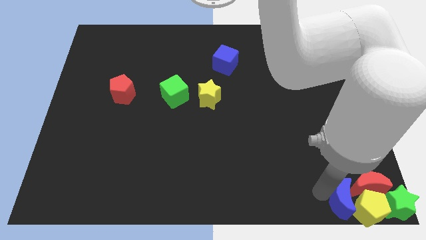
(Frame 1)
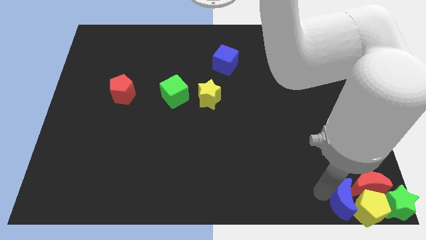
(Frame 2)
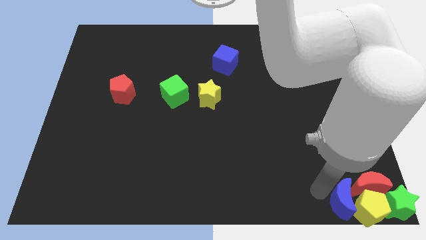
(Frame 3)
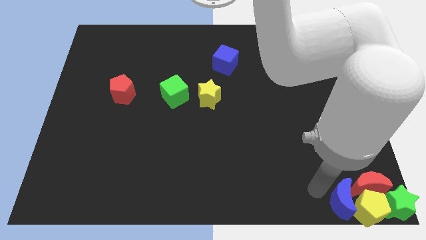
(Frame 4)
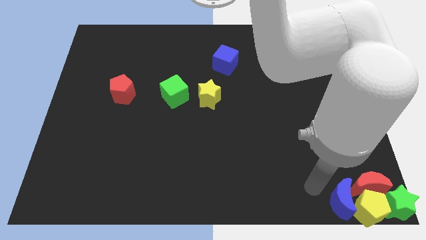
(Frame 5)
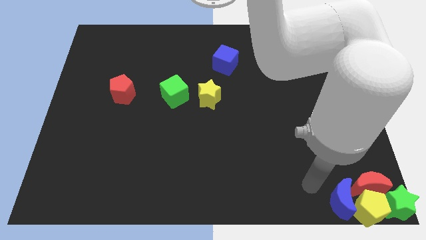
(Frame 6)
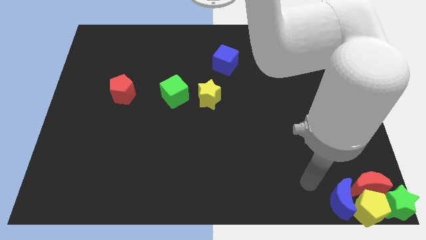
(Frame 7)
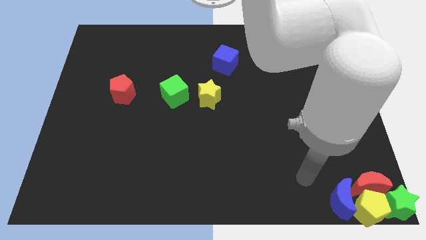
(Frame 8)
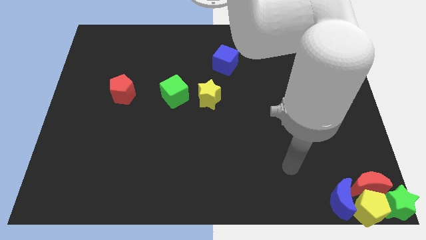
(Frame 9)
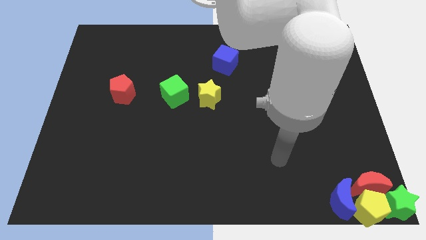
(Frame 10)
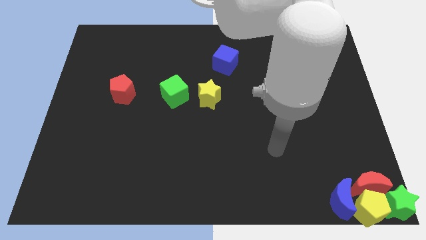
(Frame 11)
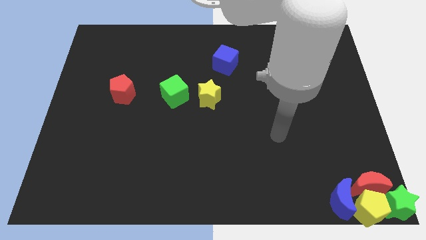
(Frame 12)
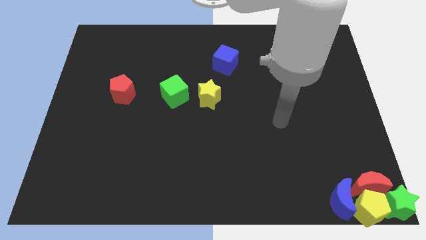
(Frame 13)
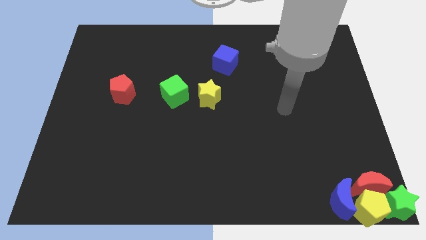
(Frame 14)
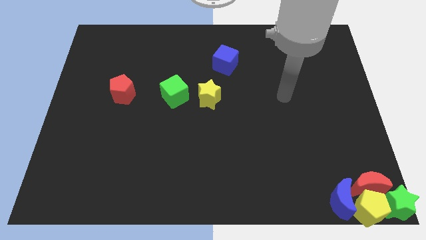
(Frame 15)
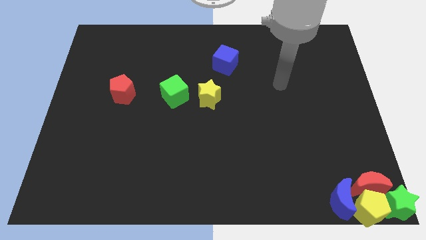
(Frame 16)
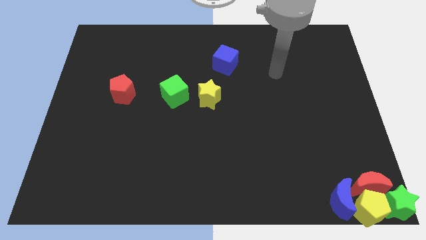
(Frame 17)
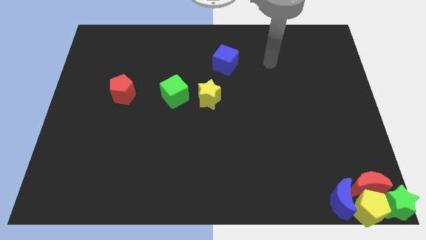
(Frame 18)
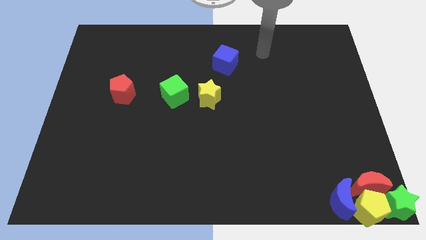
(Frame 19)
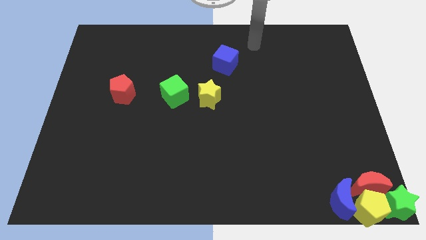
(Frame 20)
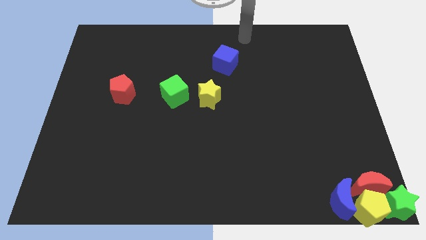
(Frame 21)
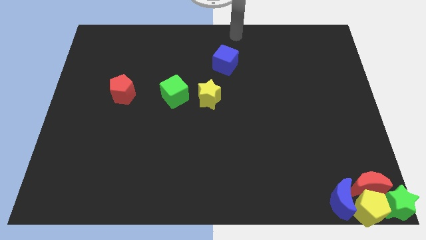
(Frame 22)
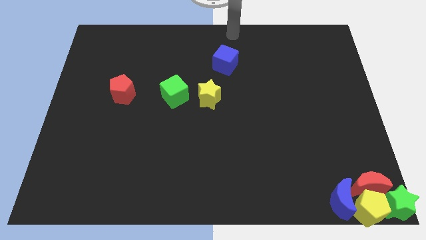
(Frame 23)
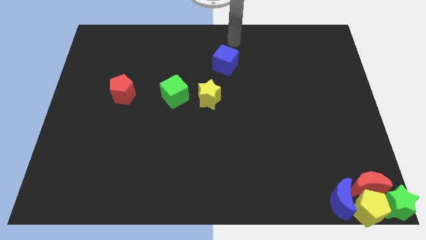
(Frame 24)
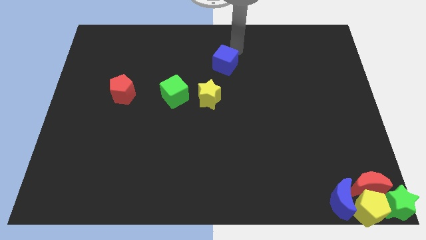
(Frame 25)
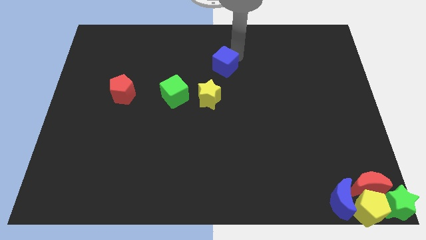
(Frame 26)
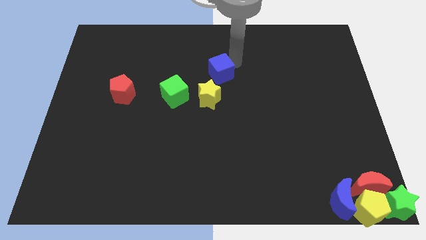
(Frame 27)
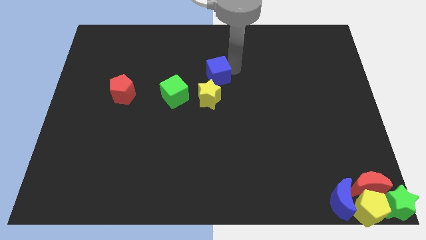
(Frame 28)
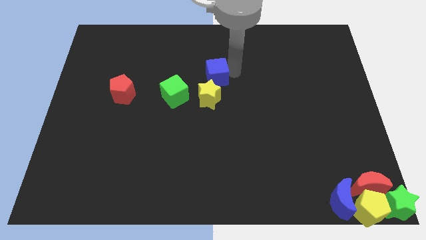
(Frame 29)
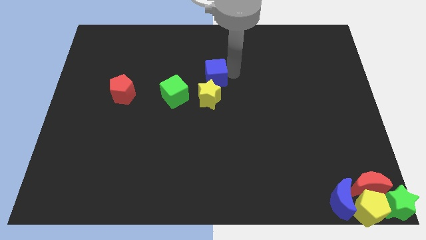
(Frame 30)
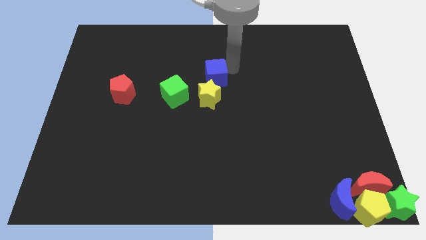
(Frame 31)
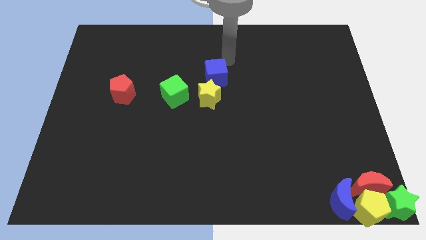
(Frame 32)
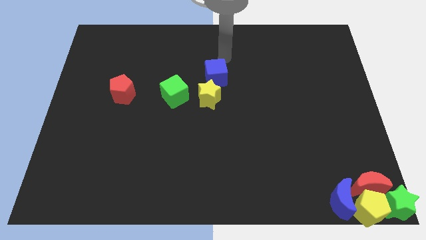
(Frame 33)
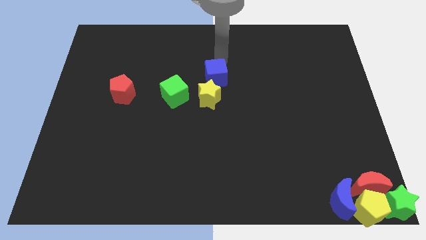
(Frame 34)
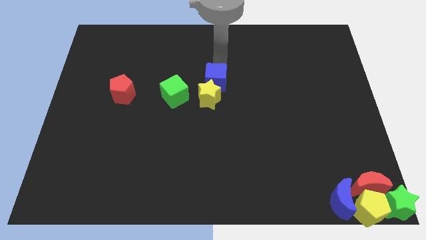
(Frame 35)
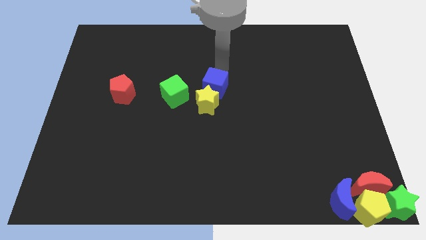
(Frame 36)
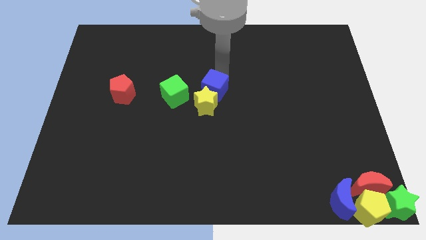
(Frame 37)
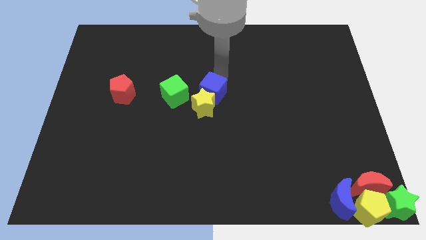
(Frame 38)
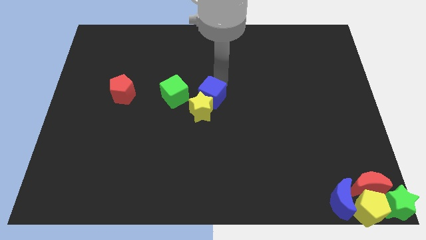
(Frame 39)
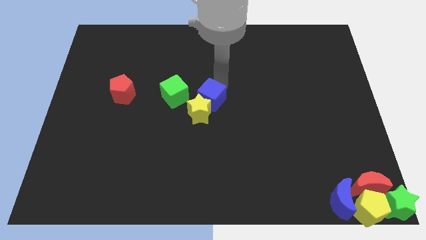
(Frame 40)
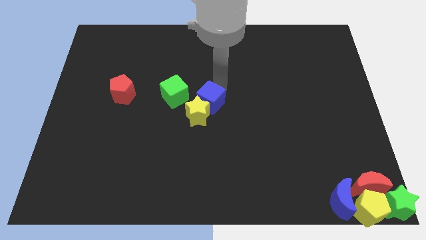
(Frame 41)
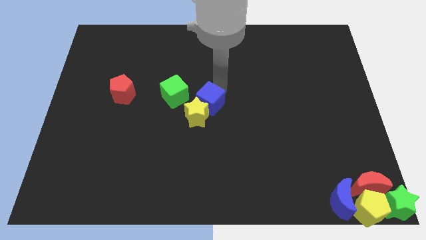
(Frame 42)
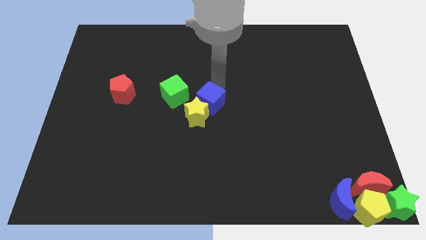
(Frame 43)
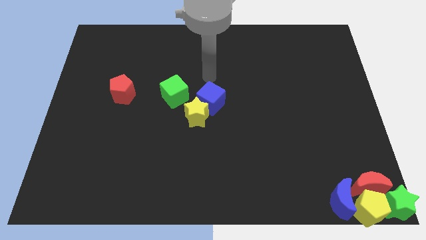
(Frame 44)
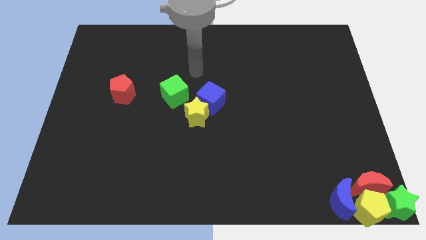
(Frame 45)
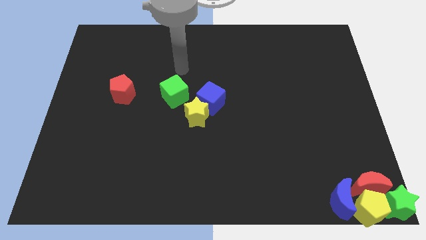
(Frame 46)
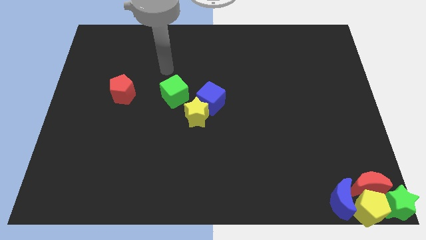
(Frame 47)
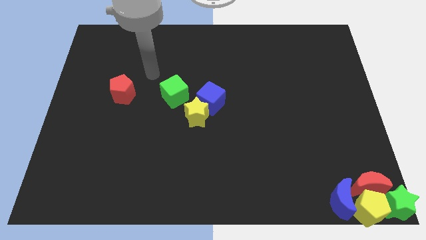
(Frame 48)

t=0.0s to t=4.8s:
move the blue cube and yellow star slightly down

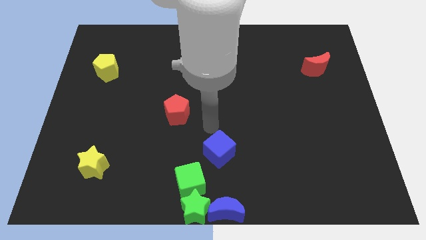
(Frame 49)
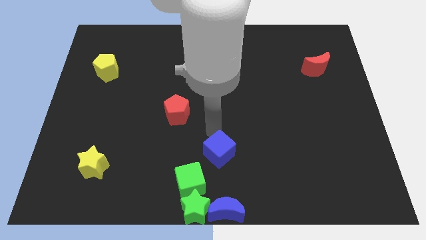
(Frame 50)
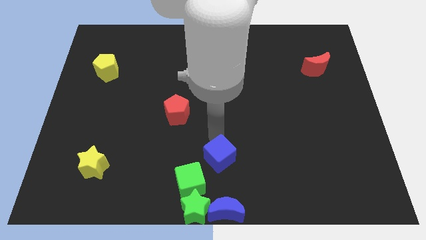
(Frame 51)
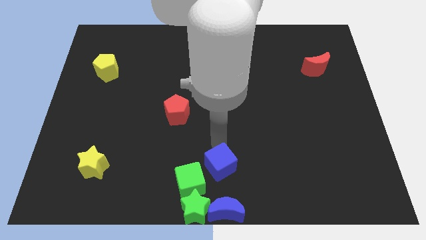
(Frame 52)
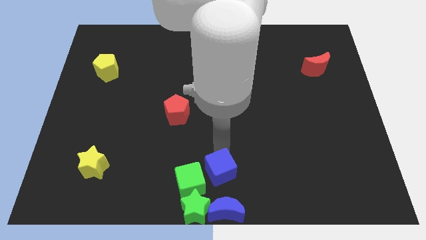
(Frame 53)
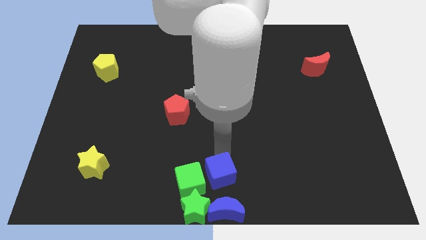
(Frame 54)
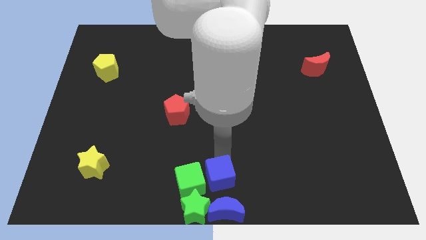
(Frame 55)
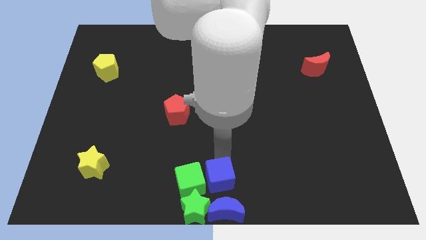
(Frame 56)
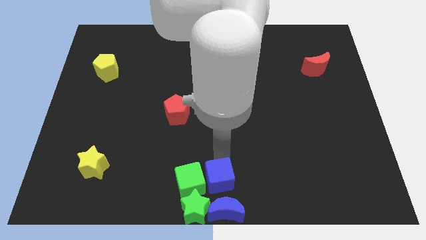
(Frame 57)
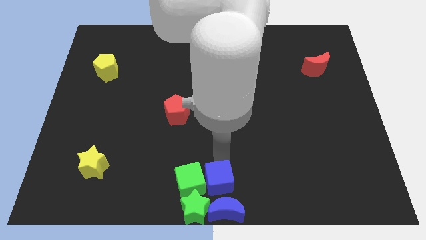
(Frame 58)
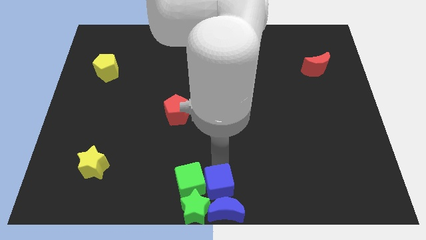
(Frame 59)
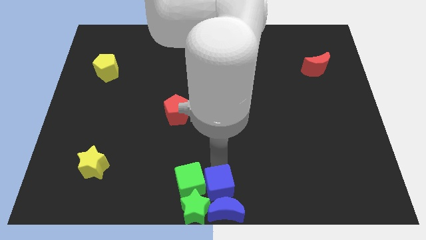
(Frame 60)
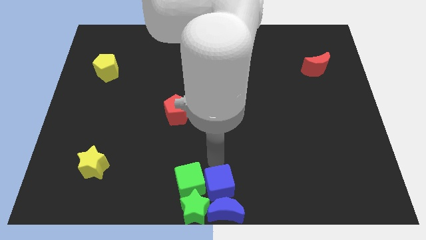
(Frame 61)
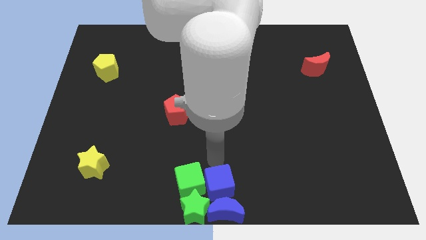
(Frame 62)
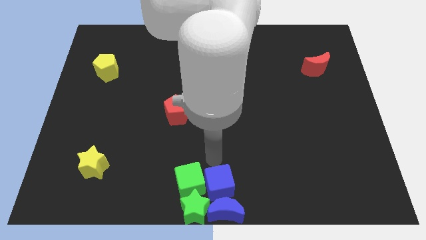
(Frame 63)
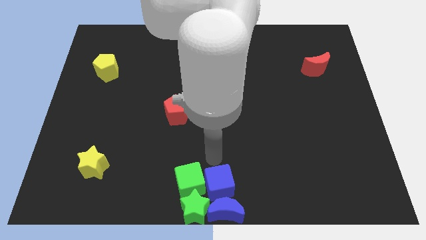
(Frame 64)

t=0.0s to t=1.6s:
push the blue cube above the blue moon

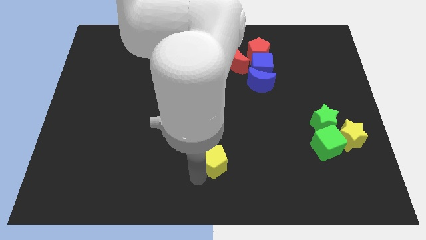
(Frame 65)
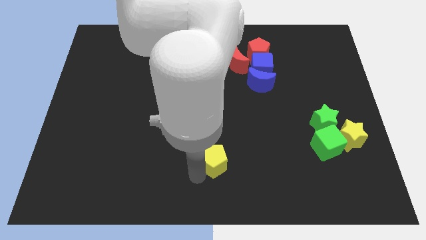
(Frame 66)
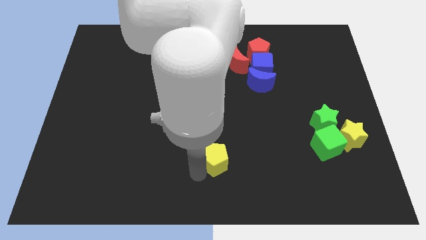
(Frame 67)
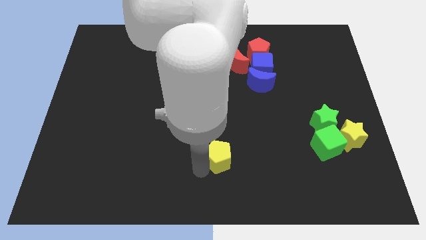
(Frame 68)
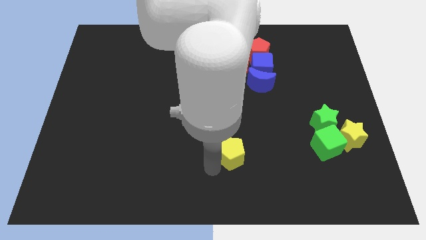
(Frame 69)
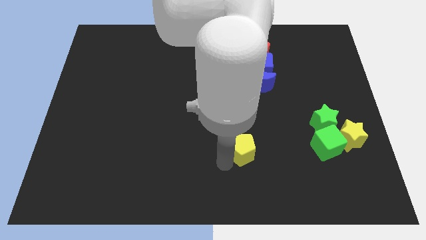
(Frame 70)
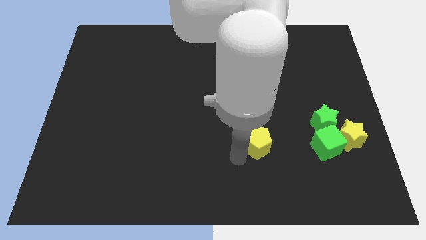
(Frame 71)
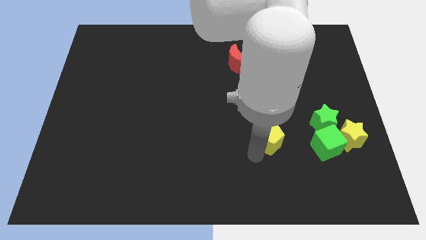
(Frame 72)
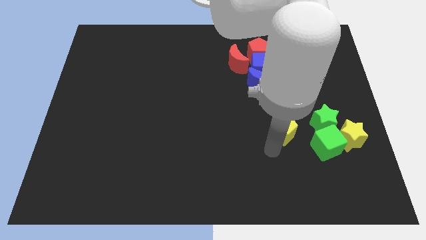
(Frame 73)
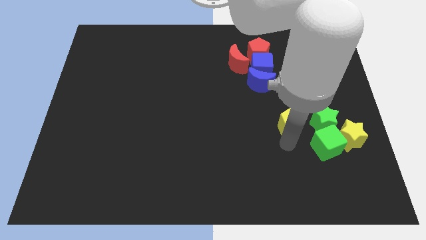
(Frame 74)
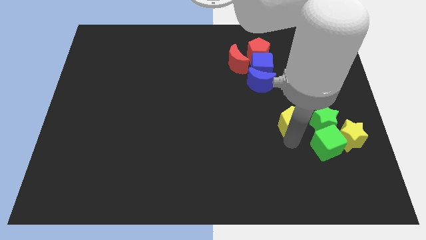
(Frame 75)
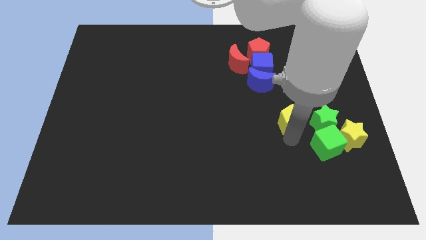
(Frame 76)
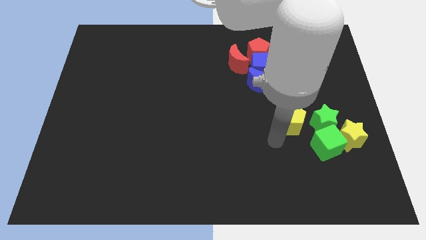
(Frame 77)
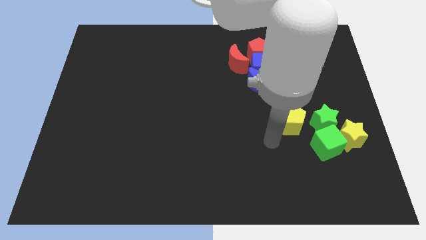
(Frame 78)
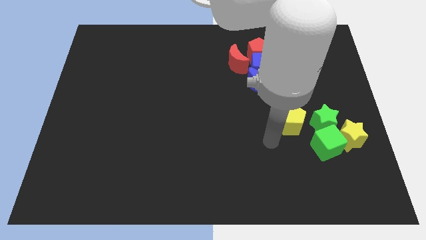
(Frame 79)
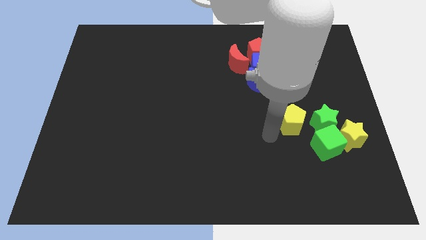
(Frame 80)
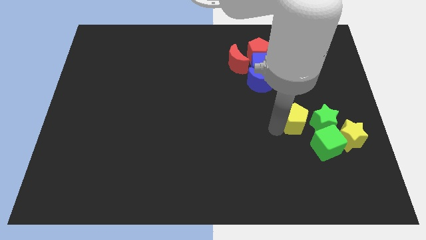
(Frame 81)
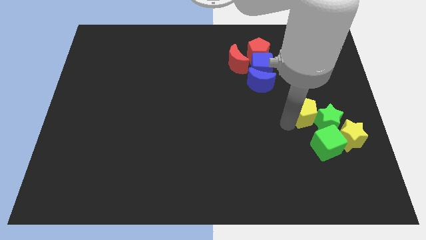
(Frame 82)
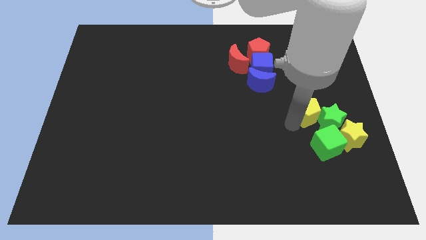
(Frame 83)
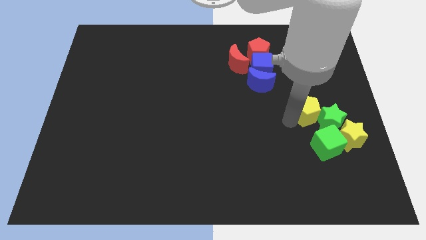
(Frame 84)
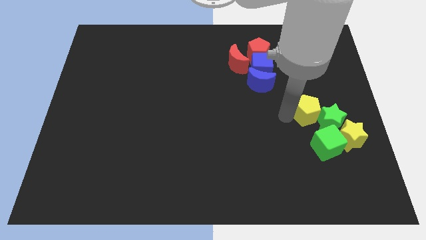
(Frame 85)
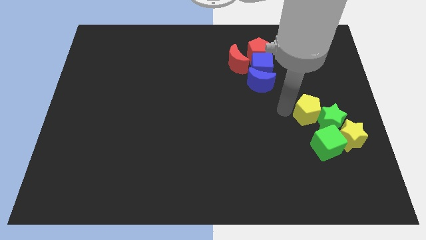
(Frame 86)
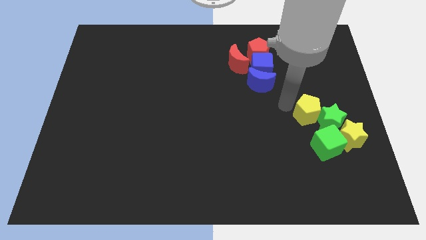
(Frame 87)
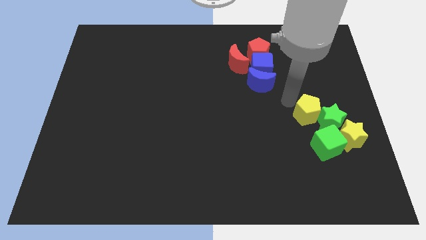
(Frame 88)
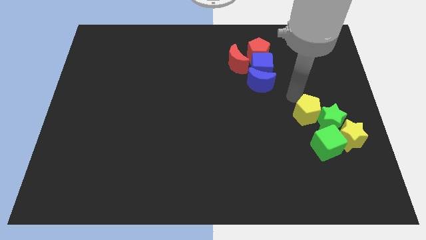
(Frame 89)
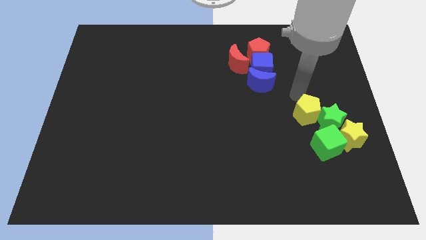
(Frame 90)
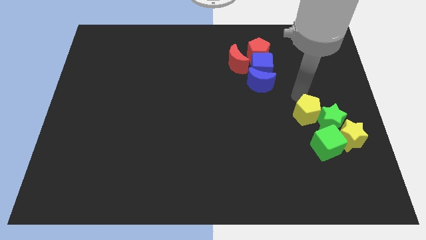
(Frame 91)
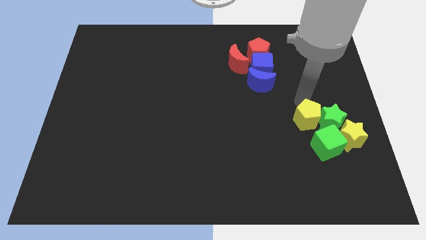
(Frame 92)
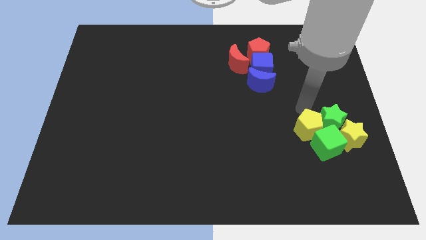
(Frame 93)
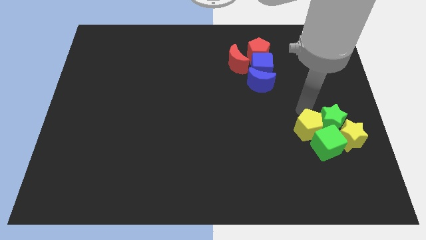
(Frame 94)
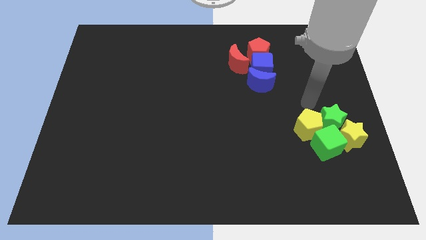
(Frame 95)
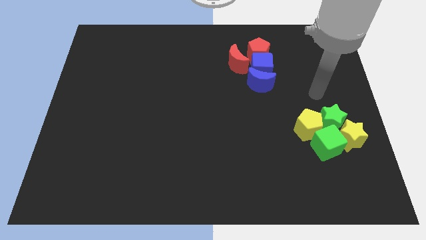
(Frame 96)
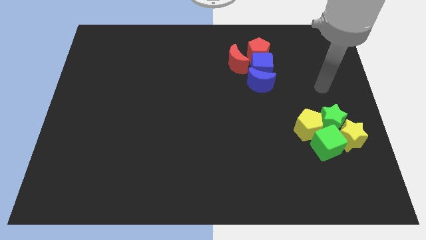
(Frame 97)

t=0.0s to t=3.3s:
move the yellow pentagon to the green blocks
